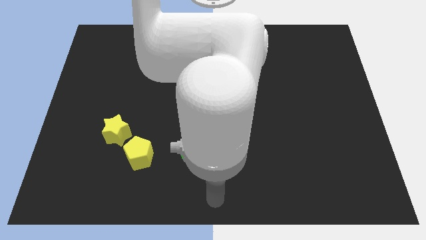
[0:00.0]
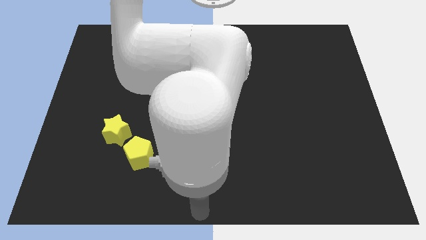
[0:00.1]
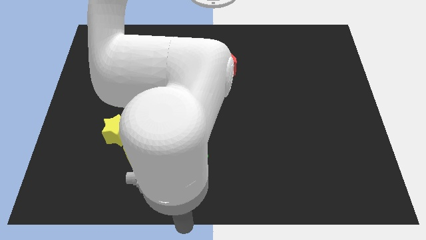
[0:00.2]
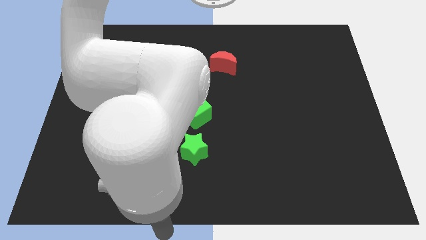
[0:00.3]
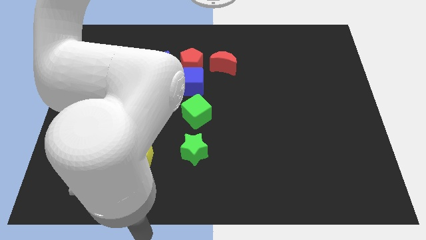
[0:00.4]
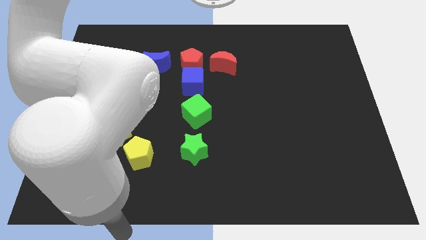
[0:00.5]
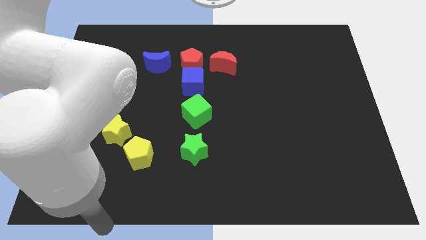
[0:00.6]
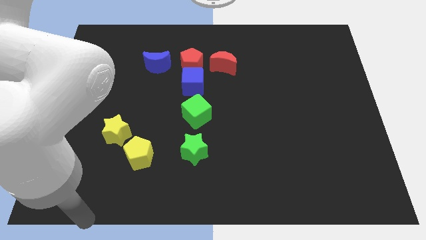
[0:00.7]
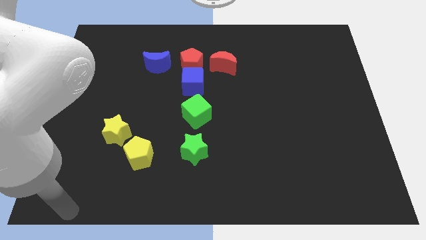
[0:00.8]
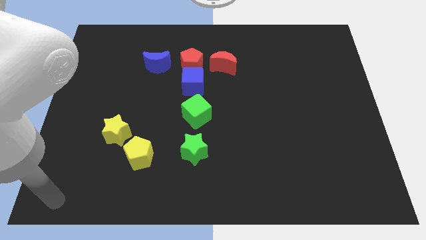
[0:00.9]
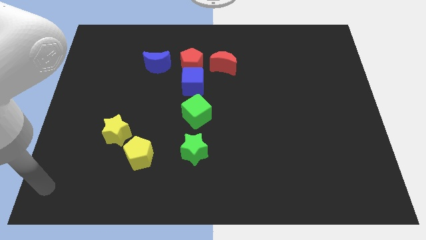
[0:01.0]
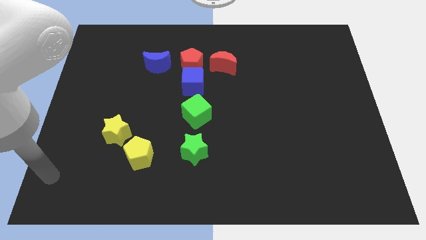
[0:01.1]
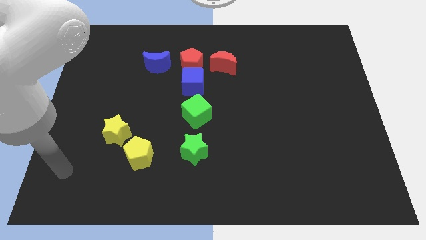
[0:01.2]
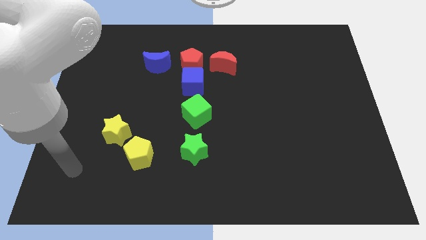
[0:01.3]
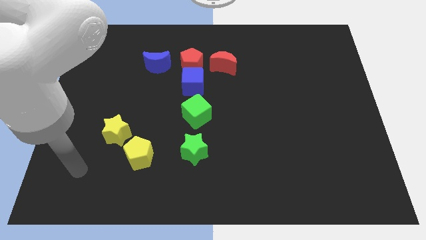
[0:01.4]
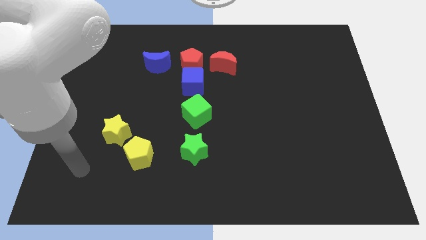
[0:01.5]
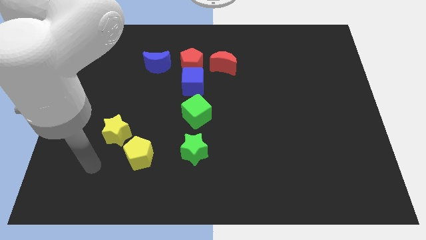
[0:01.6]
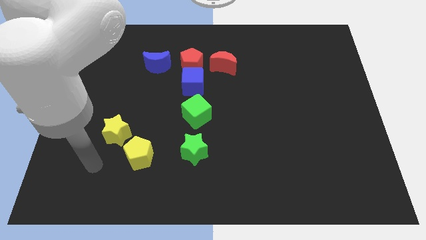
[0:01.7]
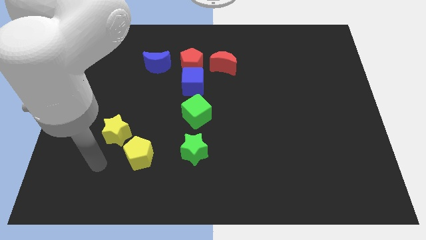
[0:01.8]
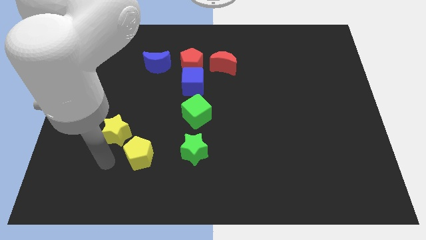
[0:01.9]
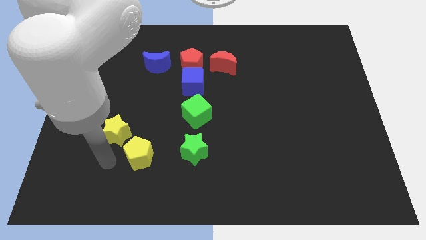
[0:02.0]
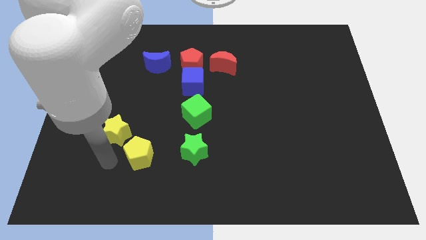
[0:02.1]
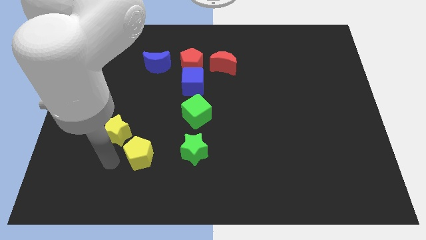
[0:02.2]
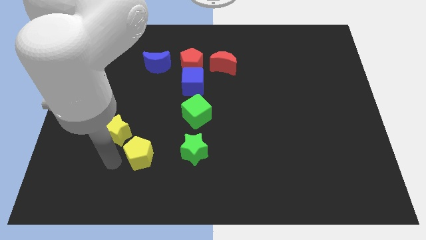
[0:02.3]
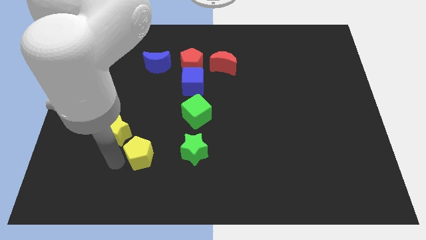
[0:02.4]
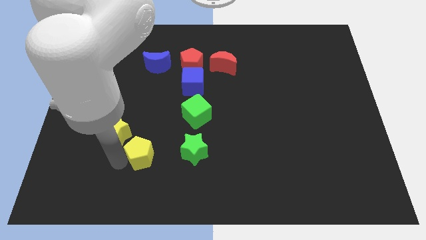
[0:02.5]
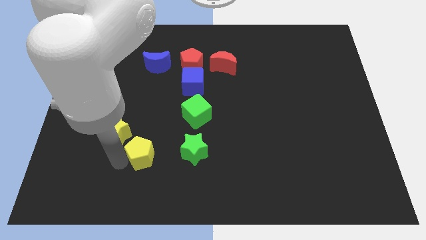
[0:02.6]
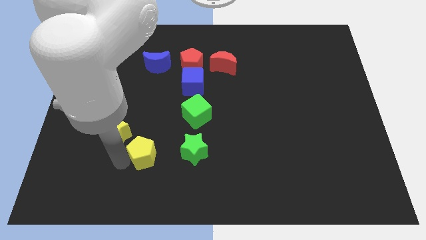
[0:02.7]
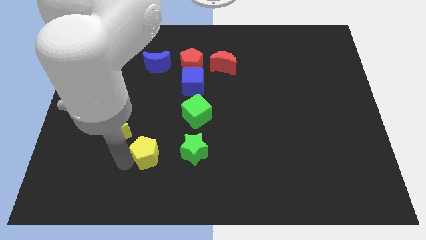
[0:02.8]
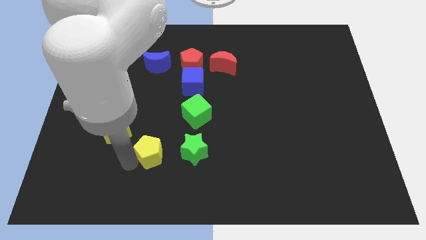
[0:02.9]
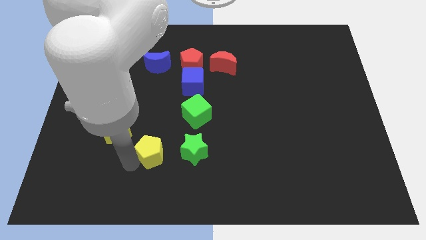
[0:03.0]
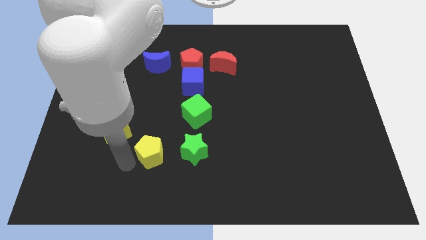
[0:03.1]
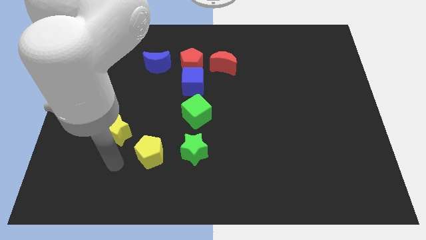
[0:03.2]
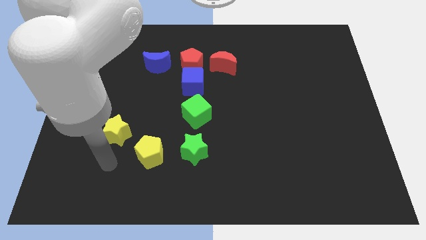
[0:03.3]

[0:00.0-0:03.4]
slightly move the yellow pentagon towards the left to the green star

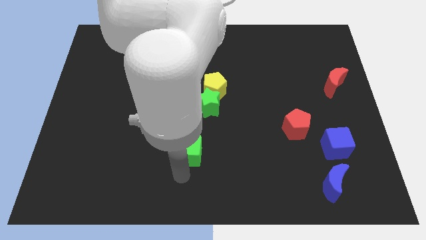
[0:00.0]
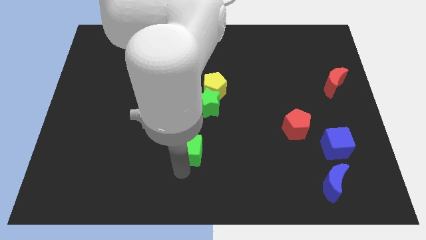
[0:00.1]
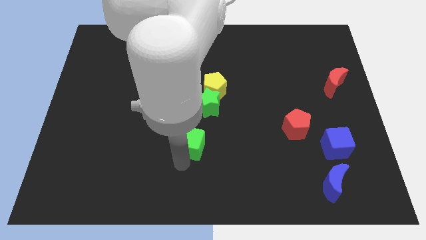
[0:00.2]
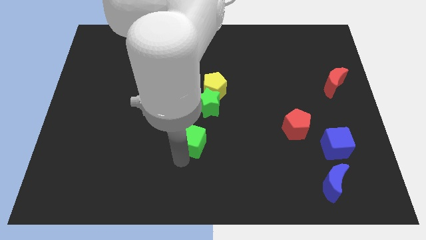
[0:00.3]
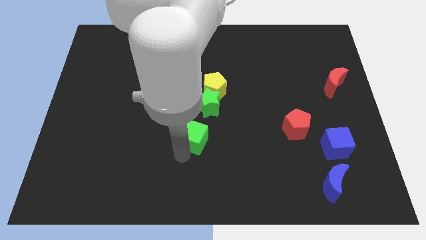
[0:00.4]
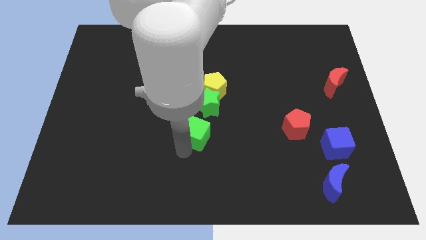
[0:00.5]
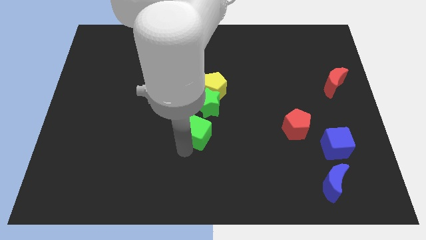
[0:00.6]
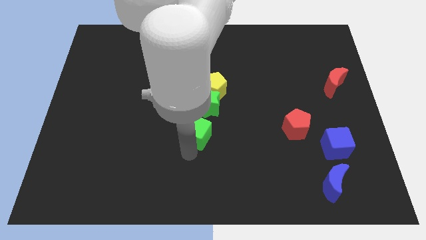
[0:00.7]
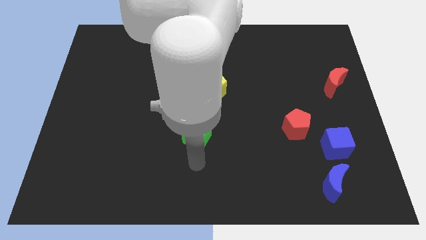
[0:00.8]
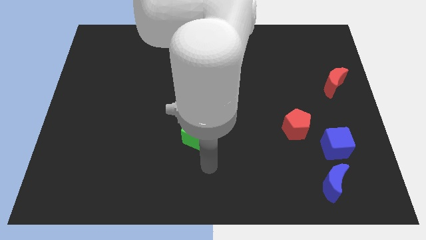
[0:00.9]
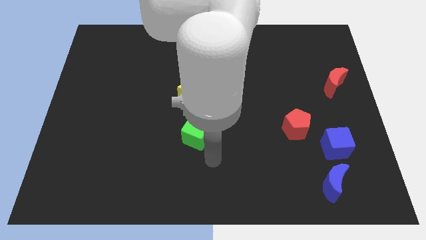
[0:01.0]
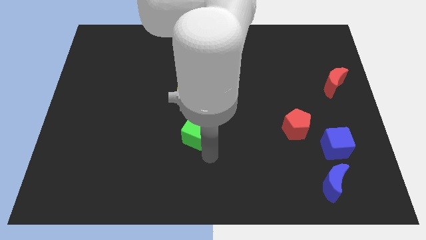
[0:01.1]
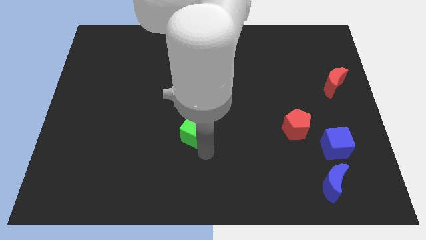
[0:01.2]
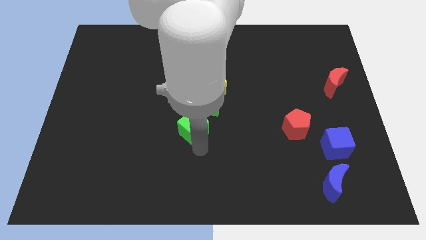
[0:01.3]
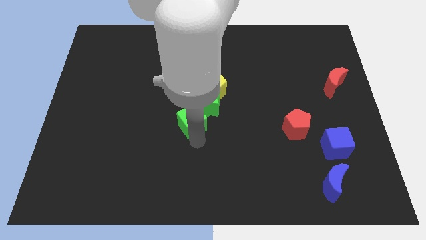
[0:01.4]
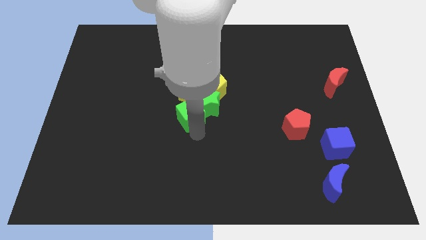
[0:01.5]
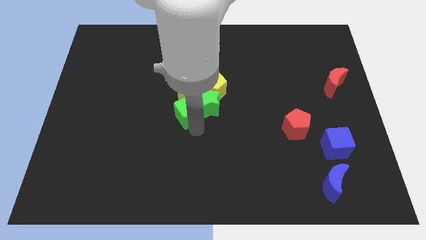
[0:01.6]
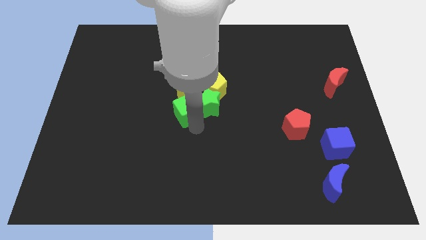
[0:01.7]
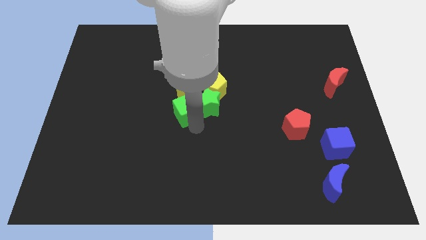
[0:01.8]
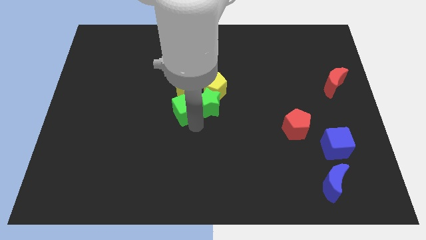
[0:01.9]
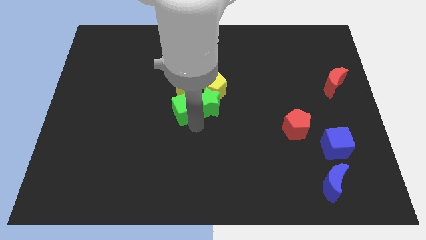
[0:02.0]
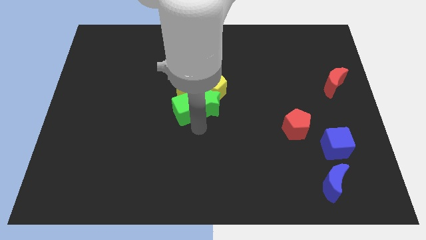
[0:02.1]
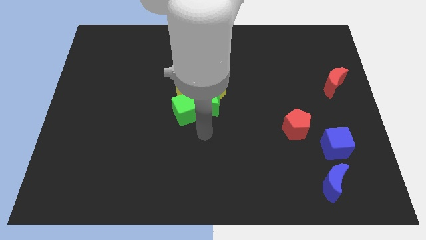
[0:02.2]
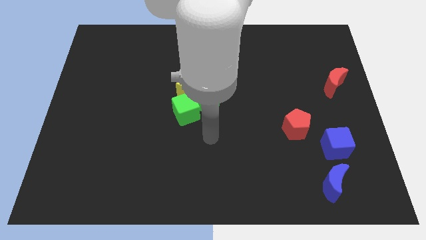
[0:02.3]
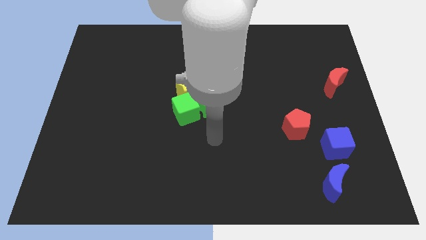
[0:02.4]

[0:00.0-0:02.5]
push the green cube into the group of blocks

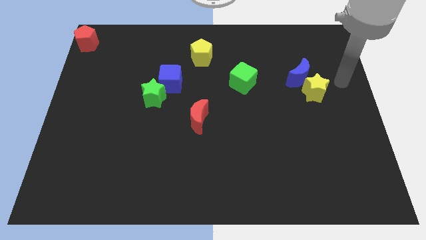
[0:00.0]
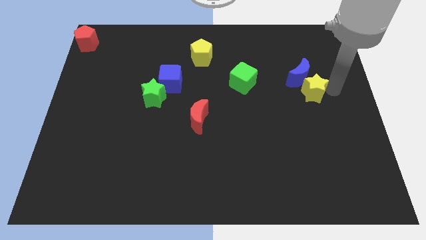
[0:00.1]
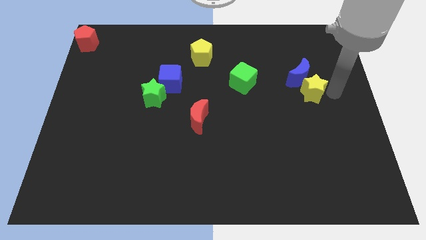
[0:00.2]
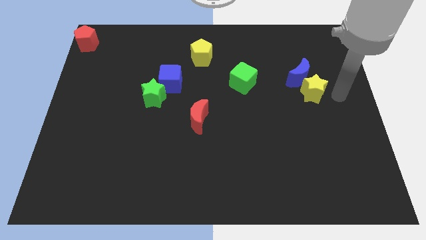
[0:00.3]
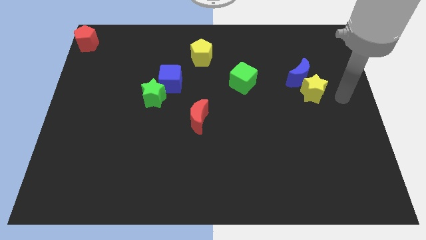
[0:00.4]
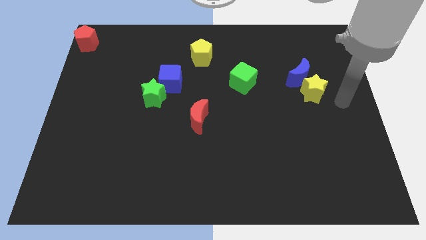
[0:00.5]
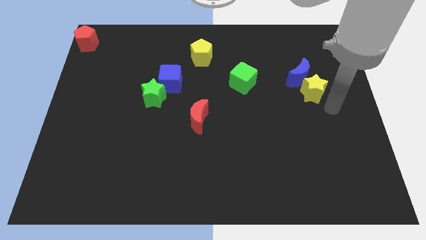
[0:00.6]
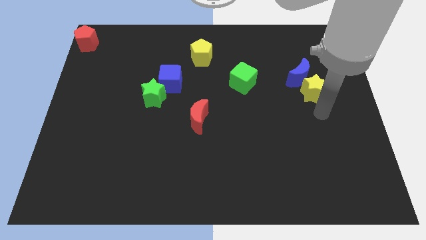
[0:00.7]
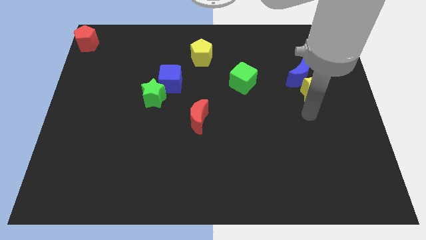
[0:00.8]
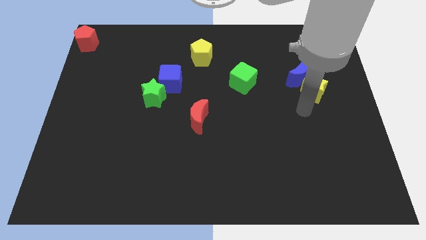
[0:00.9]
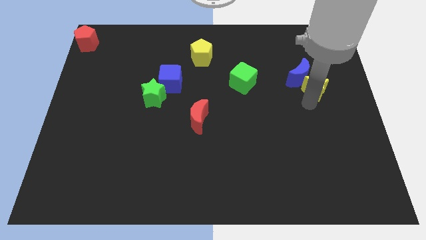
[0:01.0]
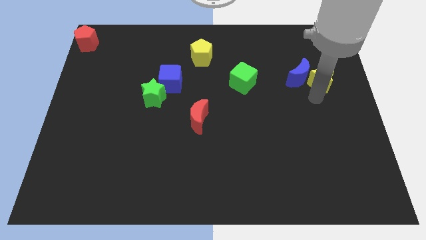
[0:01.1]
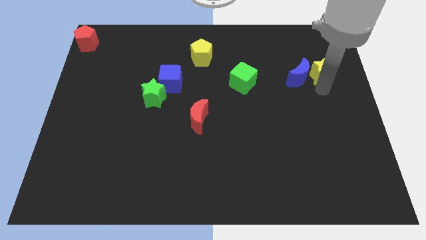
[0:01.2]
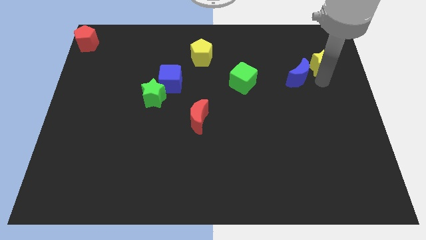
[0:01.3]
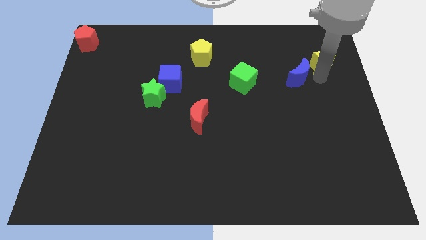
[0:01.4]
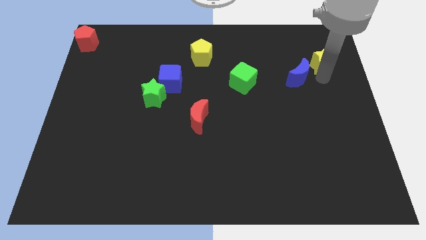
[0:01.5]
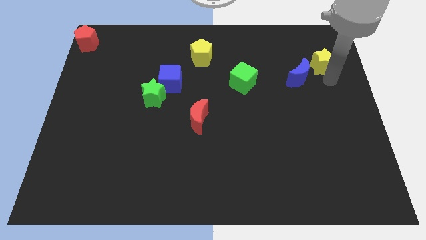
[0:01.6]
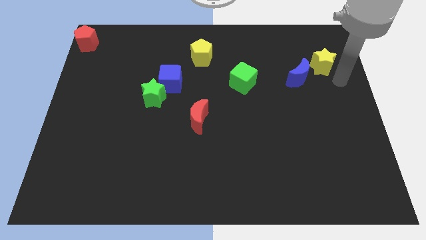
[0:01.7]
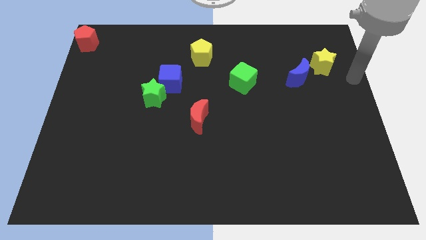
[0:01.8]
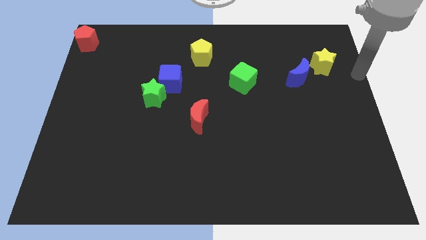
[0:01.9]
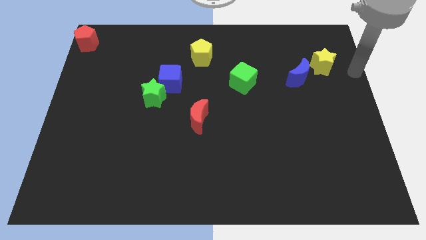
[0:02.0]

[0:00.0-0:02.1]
place a yellow star to the right of the blue moon

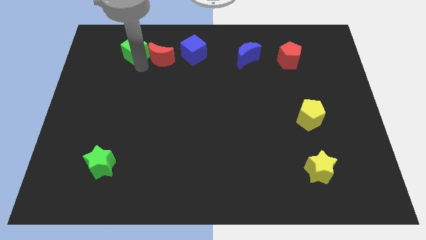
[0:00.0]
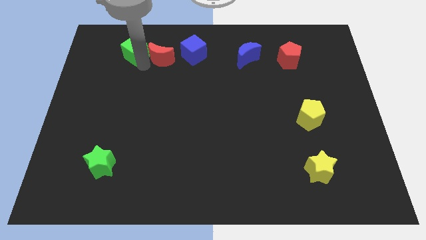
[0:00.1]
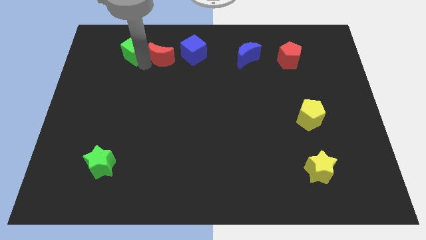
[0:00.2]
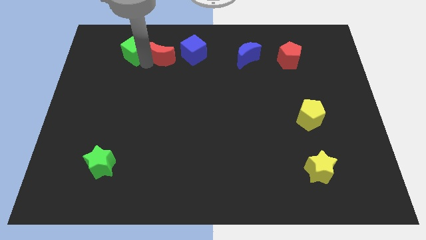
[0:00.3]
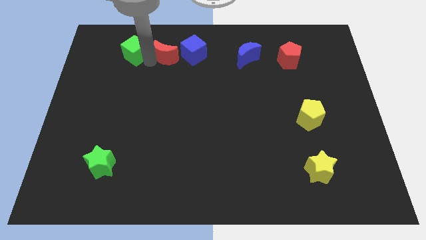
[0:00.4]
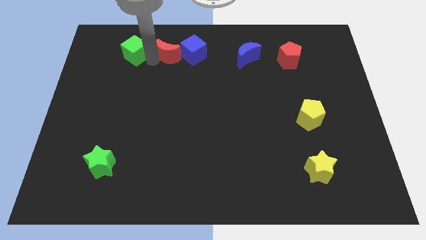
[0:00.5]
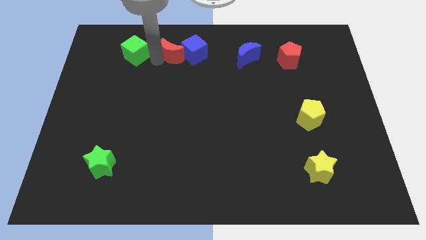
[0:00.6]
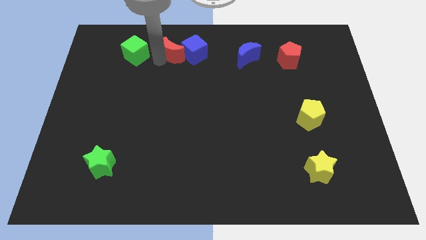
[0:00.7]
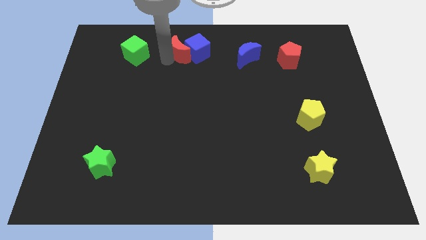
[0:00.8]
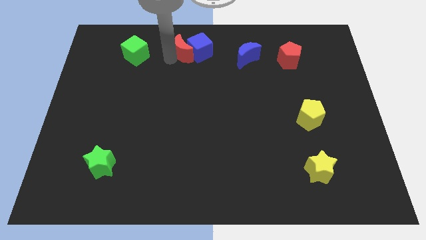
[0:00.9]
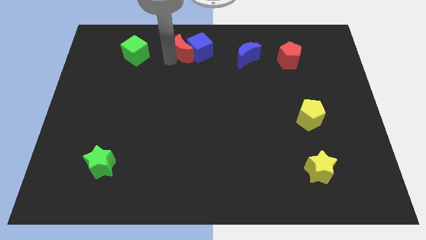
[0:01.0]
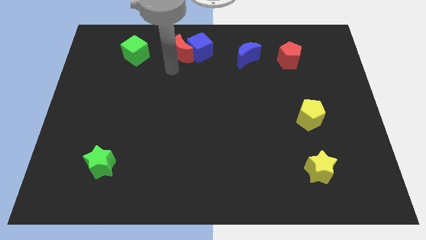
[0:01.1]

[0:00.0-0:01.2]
push the red crescent into the blue cube
